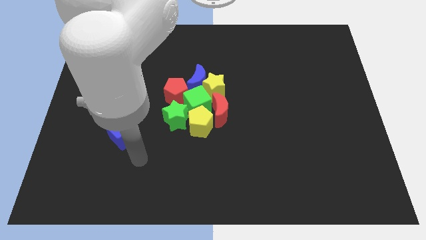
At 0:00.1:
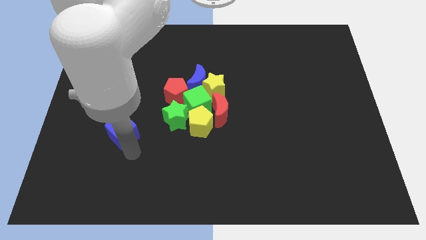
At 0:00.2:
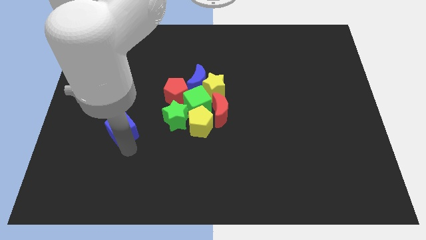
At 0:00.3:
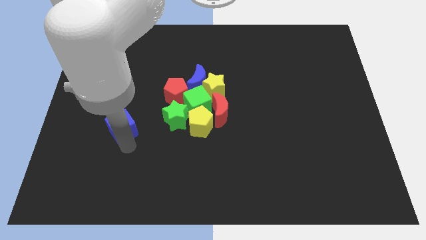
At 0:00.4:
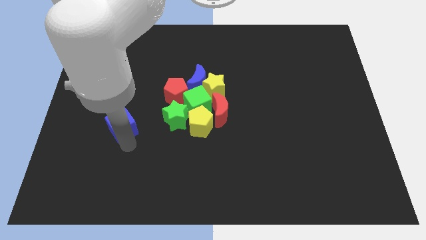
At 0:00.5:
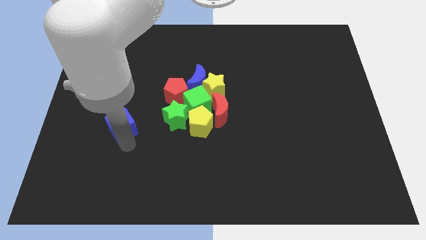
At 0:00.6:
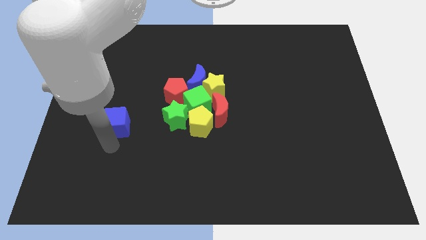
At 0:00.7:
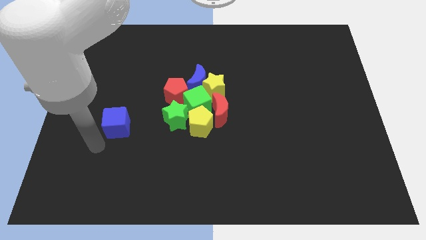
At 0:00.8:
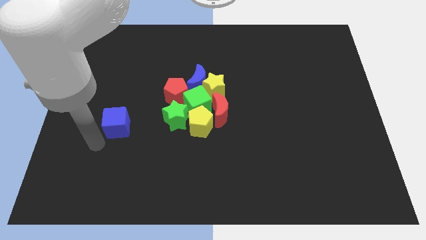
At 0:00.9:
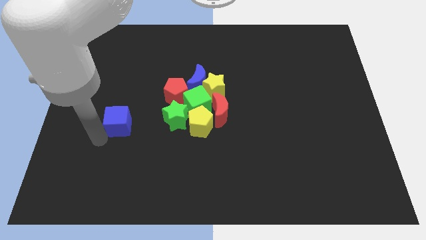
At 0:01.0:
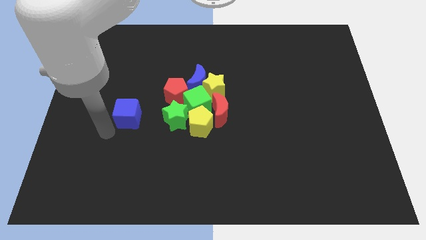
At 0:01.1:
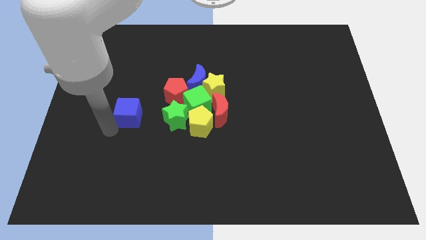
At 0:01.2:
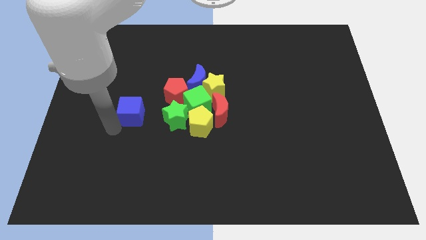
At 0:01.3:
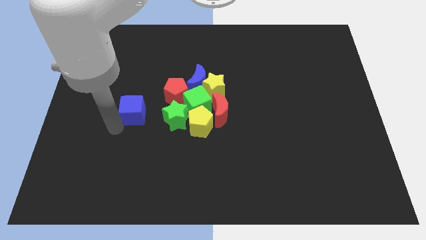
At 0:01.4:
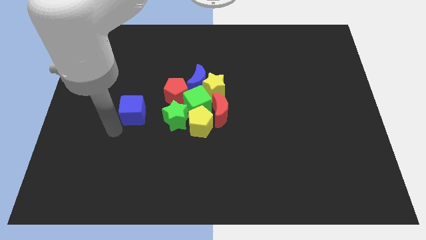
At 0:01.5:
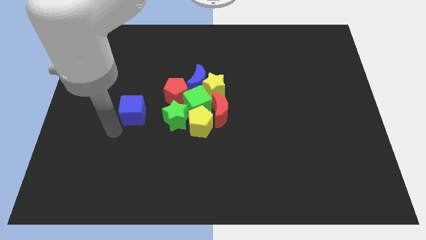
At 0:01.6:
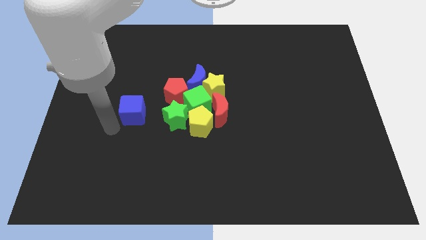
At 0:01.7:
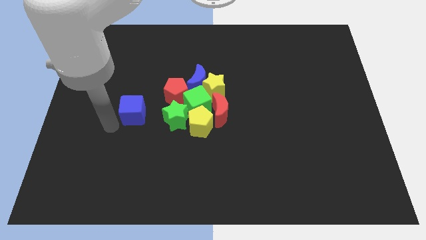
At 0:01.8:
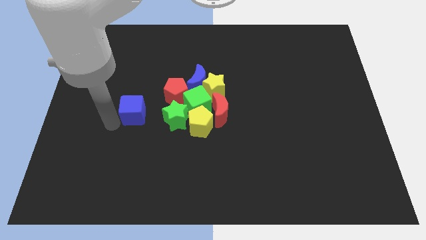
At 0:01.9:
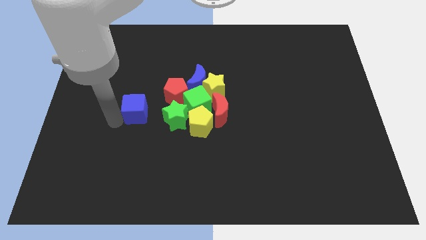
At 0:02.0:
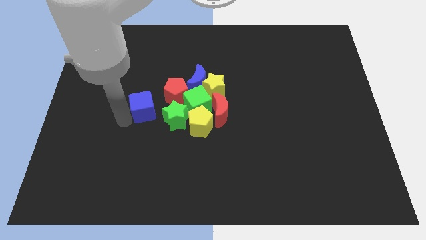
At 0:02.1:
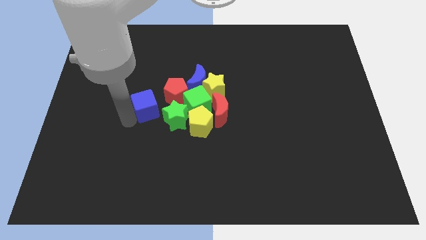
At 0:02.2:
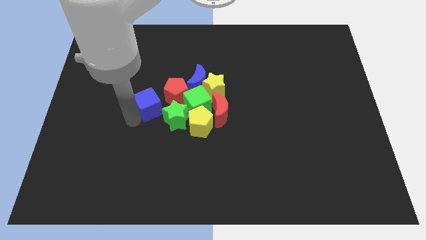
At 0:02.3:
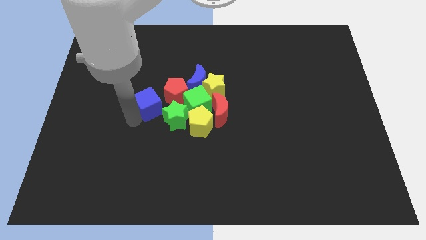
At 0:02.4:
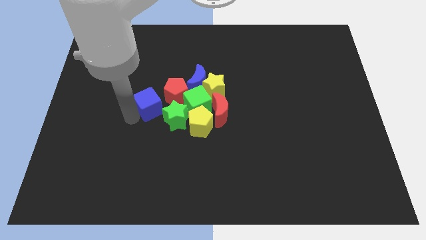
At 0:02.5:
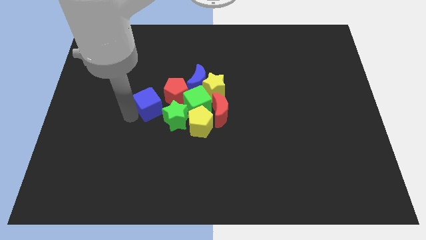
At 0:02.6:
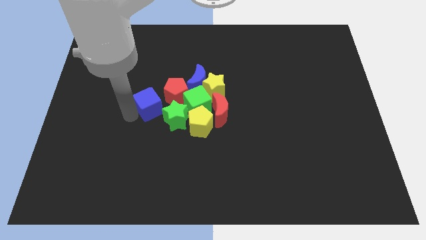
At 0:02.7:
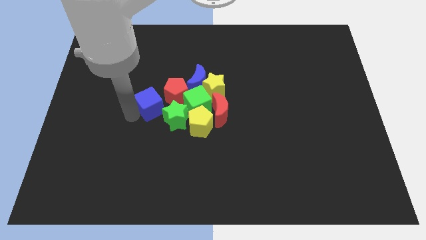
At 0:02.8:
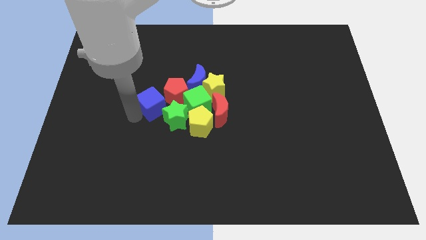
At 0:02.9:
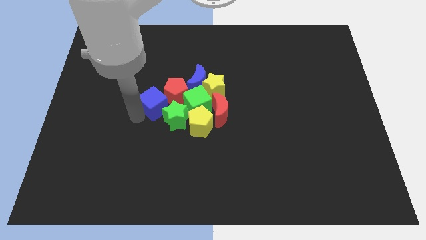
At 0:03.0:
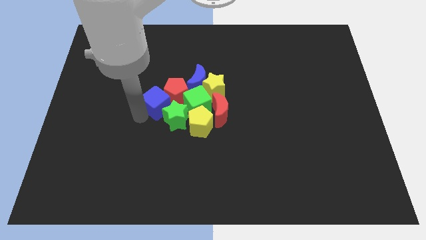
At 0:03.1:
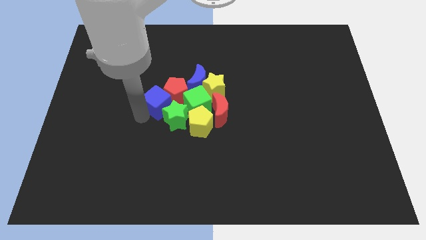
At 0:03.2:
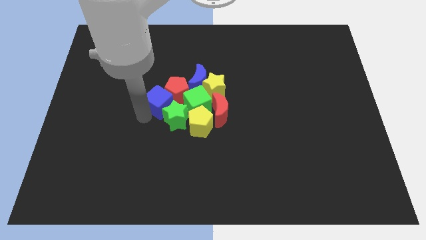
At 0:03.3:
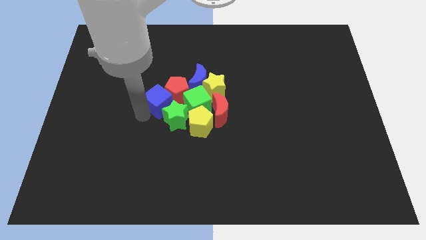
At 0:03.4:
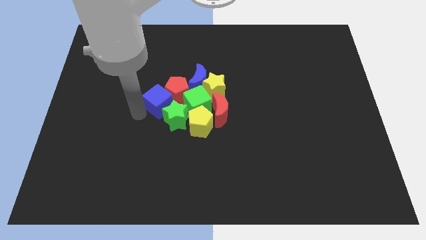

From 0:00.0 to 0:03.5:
move the blue cube into the group of blocks

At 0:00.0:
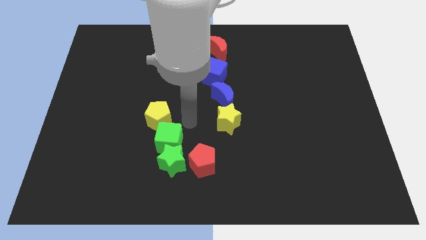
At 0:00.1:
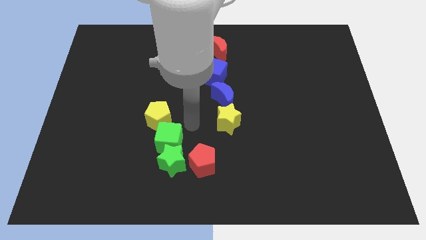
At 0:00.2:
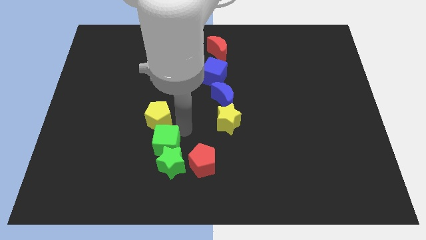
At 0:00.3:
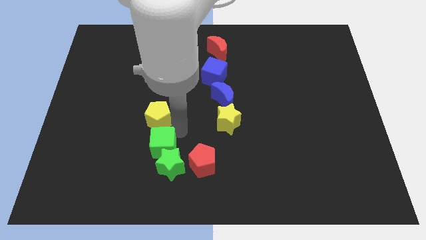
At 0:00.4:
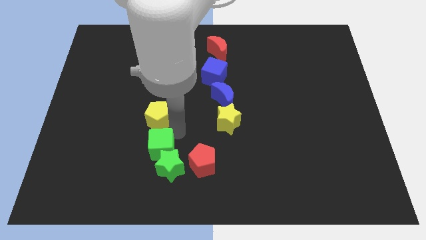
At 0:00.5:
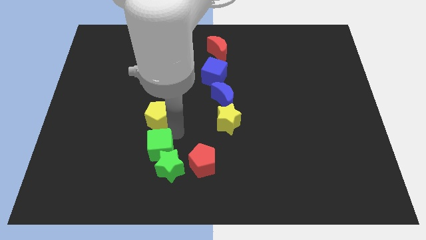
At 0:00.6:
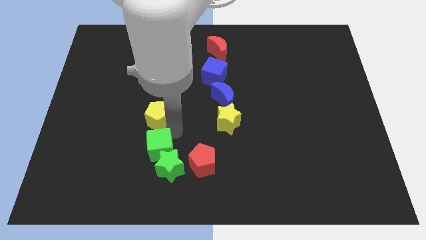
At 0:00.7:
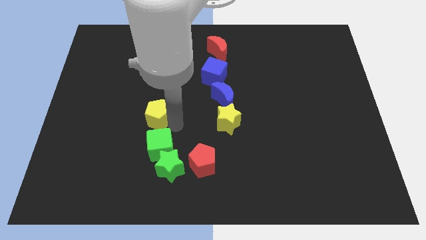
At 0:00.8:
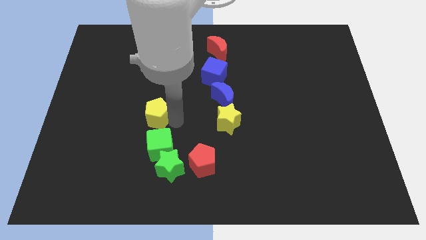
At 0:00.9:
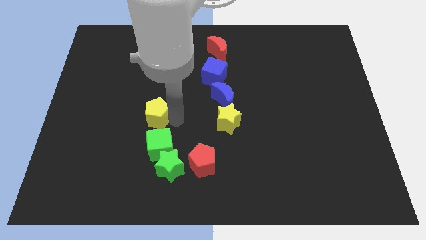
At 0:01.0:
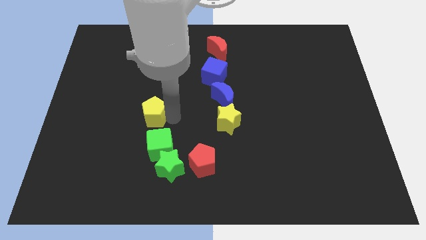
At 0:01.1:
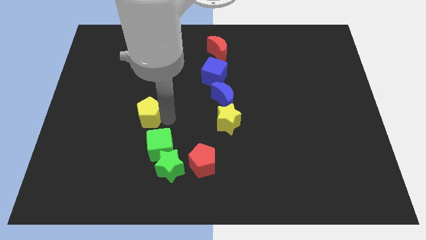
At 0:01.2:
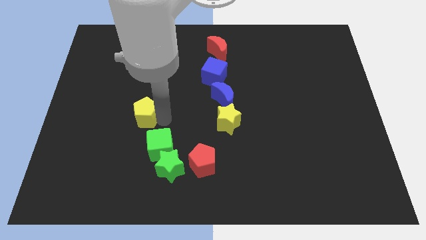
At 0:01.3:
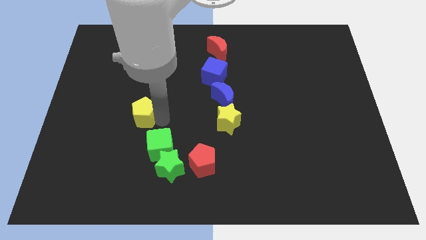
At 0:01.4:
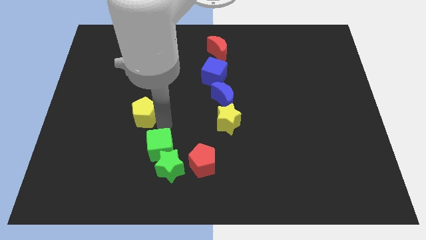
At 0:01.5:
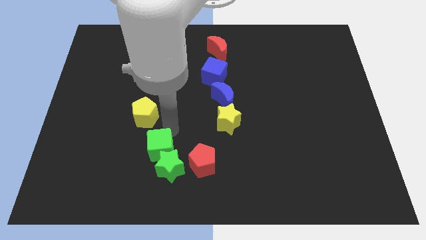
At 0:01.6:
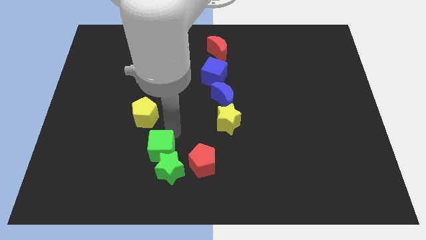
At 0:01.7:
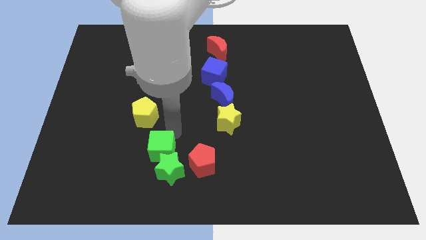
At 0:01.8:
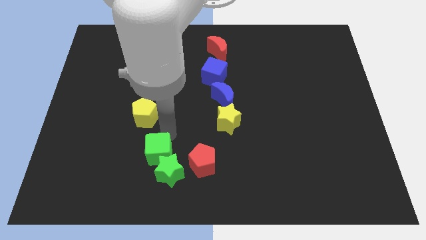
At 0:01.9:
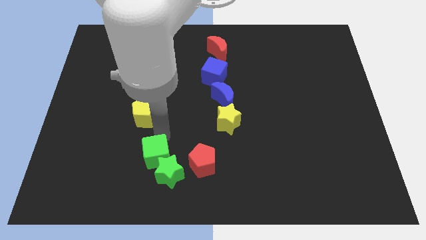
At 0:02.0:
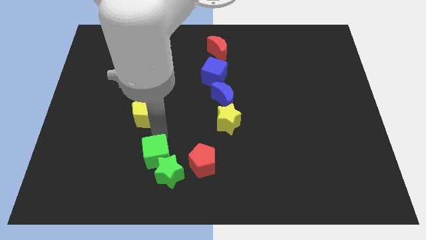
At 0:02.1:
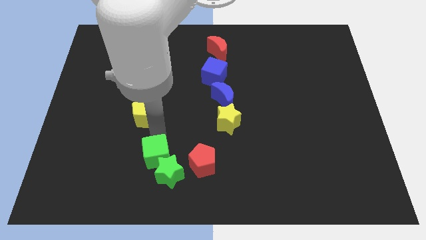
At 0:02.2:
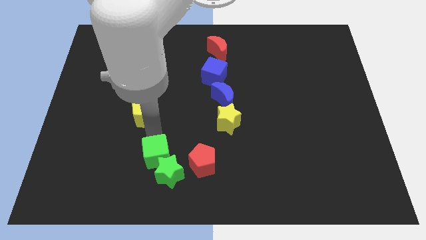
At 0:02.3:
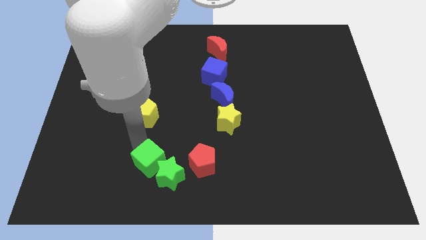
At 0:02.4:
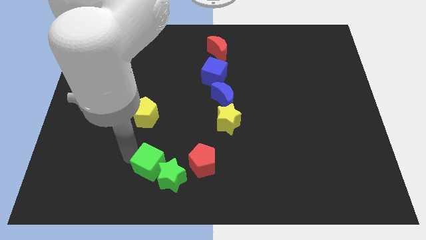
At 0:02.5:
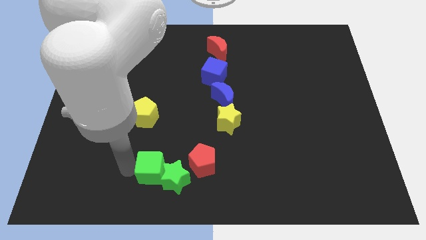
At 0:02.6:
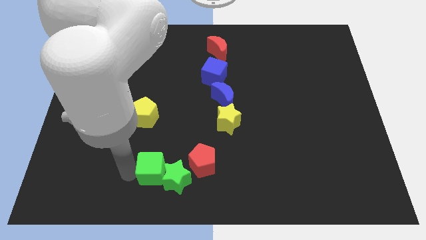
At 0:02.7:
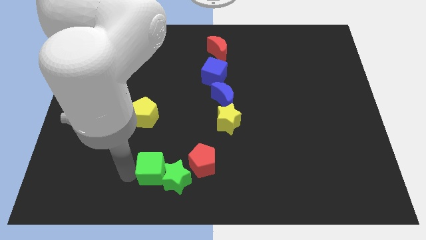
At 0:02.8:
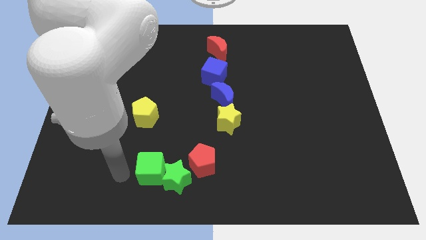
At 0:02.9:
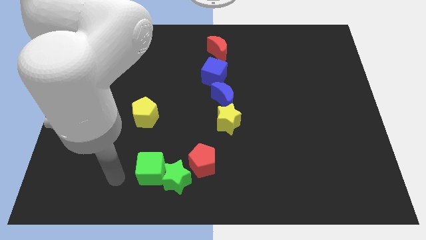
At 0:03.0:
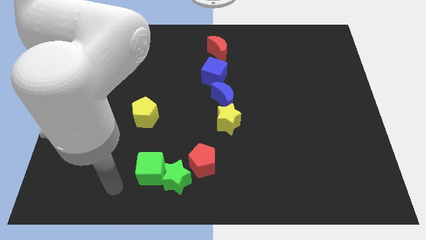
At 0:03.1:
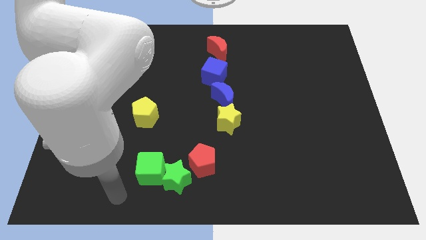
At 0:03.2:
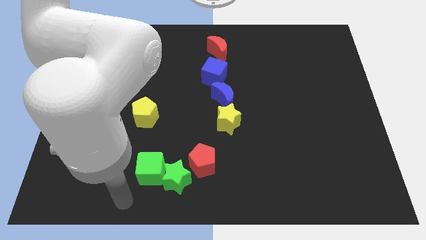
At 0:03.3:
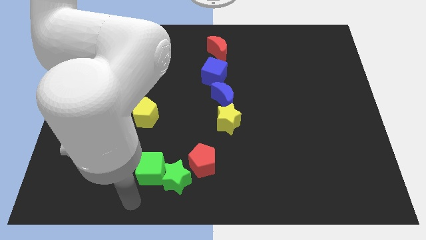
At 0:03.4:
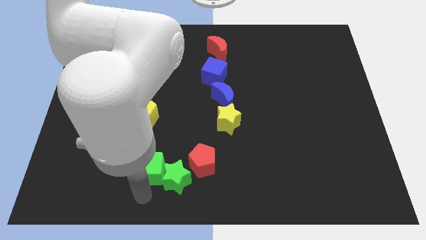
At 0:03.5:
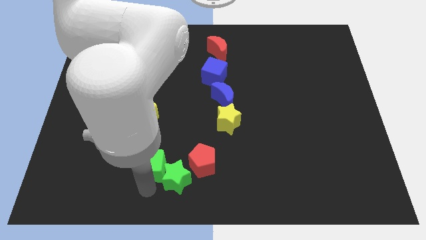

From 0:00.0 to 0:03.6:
move the green blocks to the left of the red pentagon to form a line

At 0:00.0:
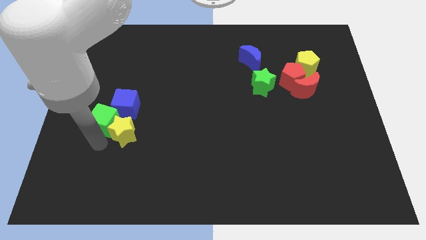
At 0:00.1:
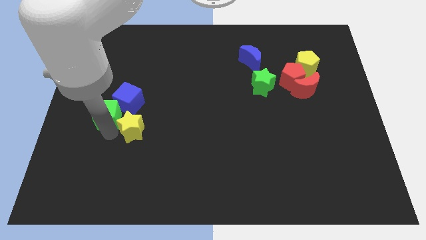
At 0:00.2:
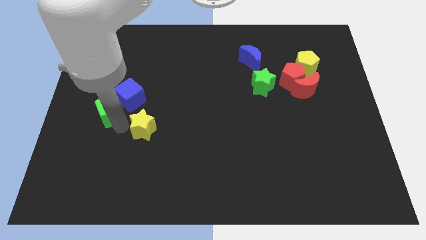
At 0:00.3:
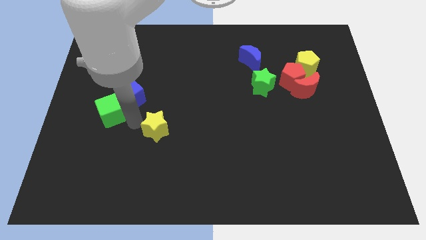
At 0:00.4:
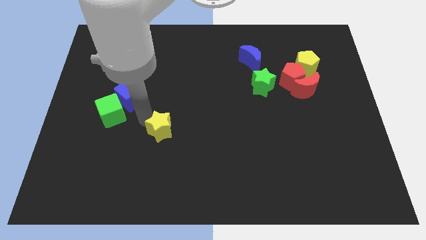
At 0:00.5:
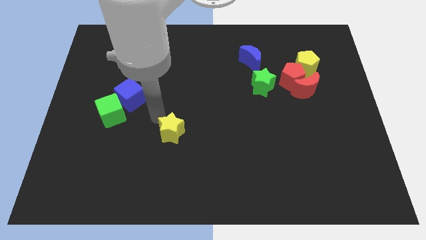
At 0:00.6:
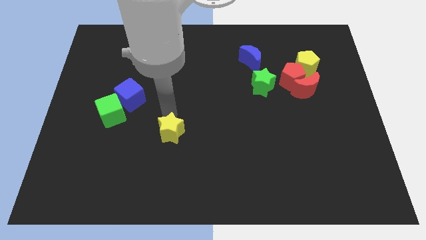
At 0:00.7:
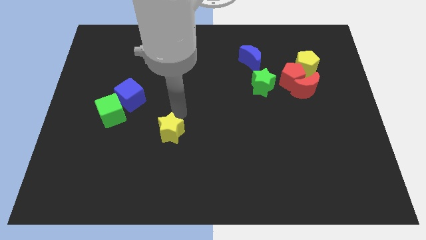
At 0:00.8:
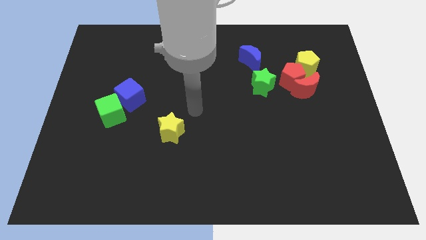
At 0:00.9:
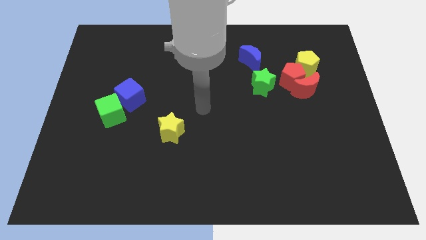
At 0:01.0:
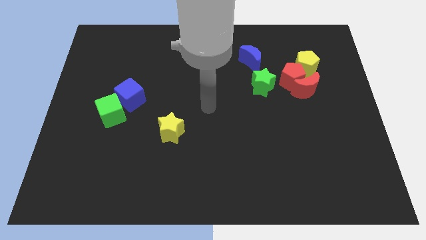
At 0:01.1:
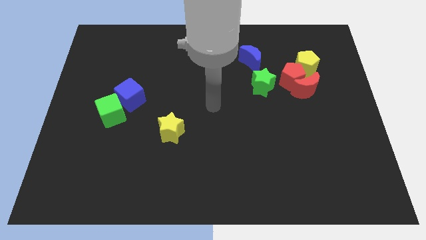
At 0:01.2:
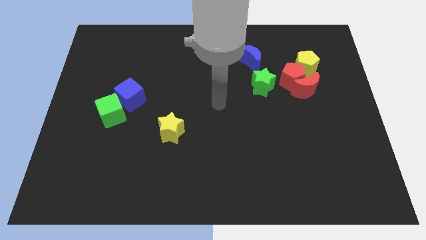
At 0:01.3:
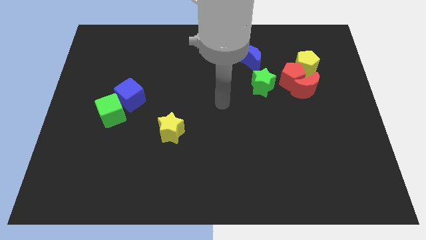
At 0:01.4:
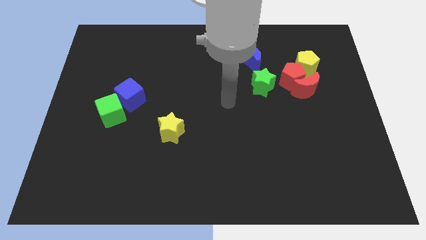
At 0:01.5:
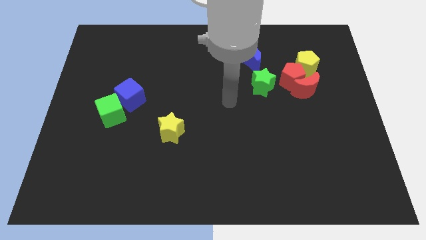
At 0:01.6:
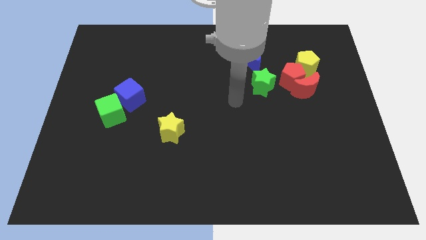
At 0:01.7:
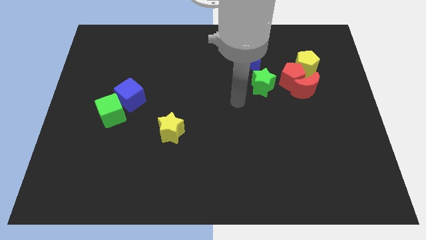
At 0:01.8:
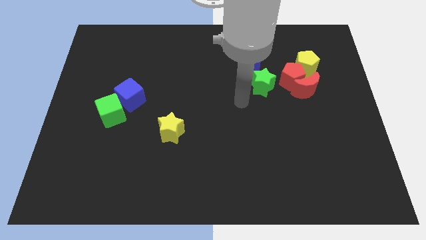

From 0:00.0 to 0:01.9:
separate the yellow star from the green cube
